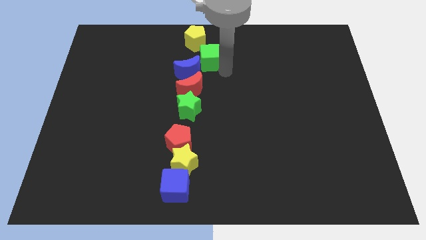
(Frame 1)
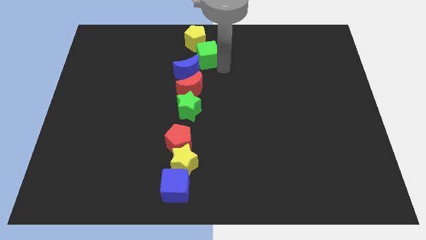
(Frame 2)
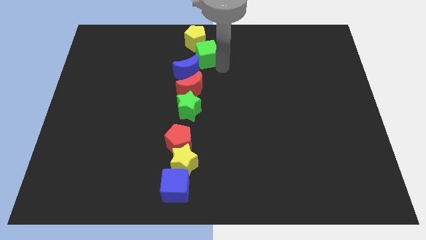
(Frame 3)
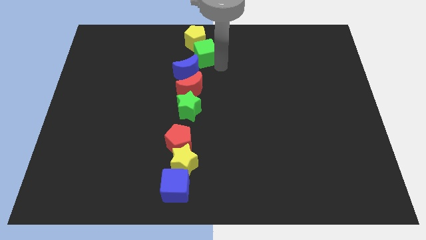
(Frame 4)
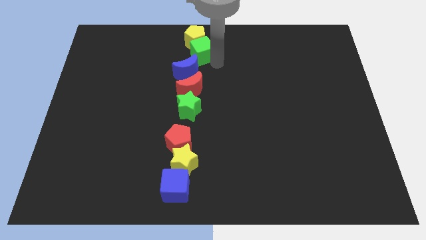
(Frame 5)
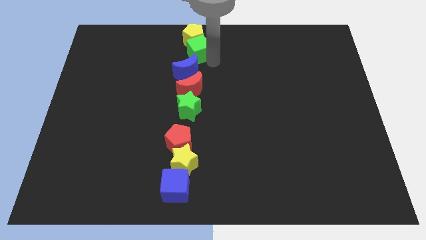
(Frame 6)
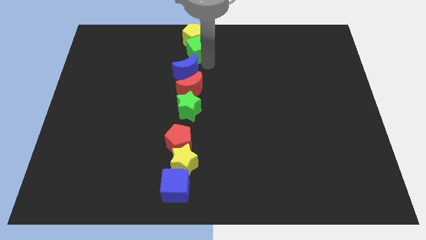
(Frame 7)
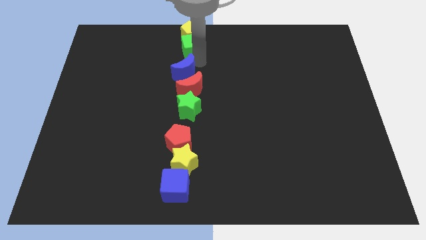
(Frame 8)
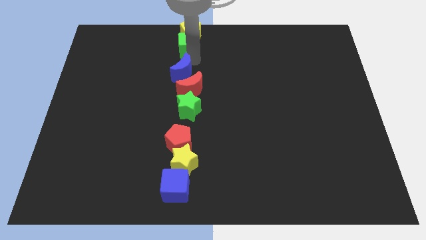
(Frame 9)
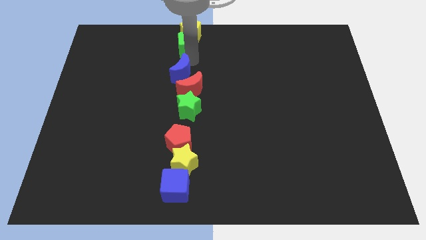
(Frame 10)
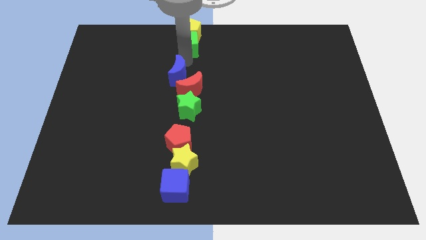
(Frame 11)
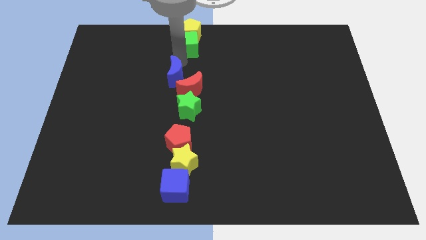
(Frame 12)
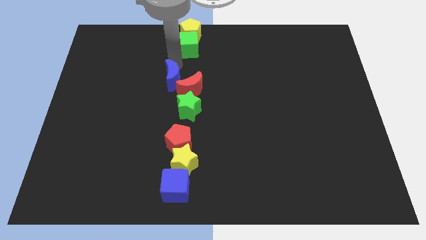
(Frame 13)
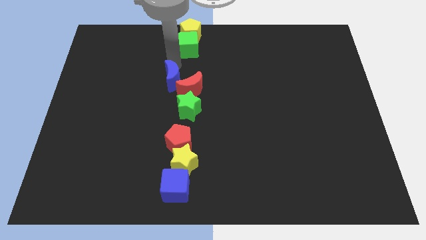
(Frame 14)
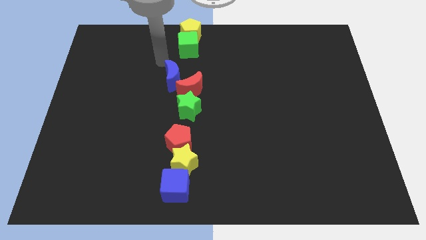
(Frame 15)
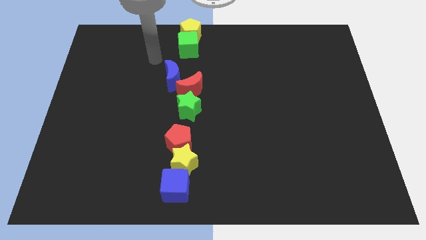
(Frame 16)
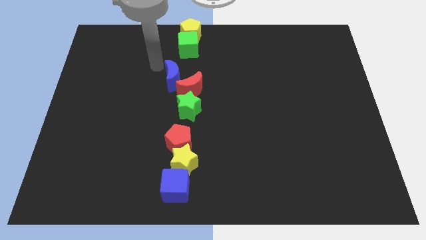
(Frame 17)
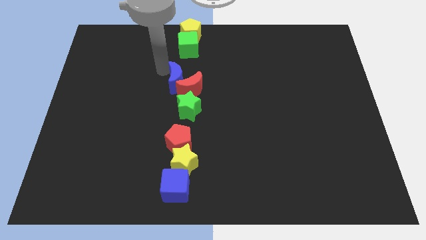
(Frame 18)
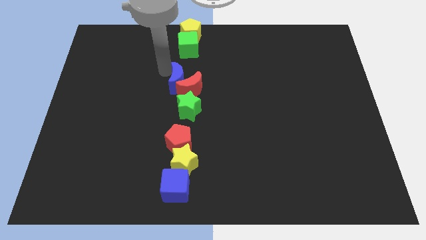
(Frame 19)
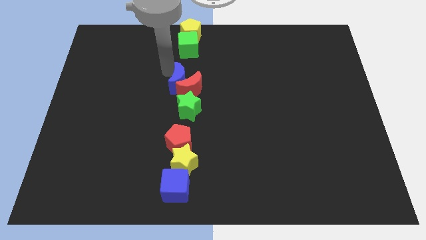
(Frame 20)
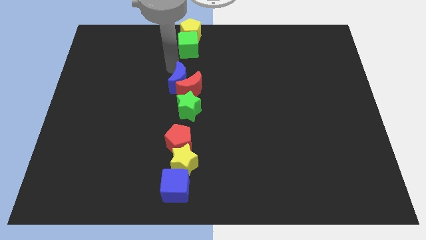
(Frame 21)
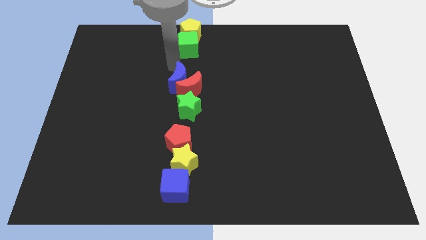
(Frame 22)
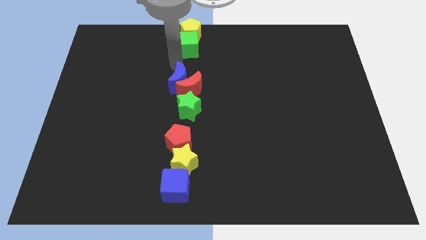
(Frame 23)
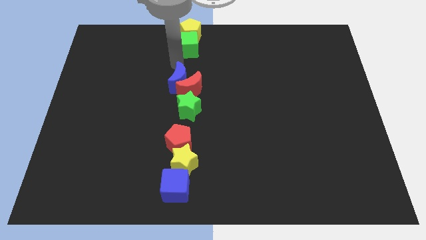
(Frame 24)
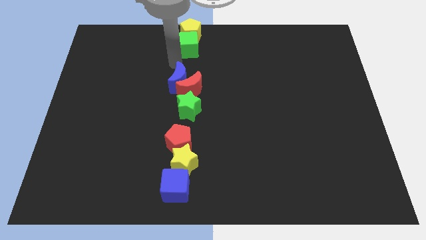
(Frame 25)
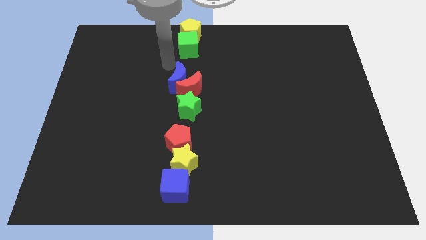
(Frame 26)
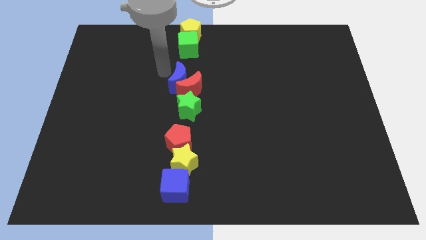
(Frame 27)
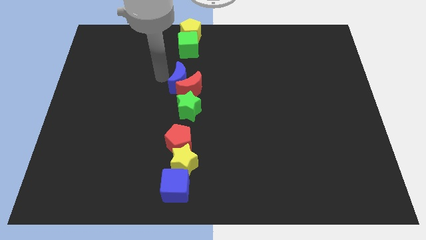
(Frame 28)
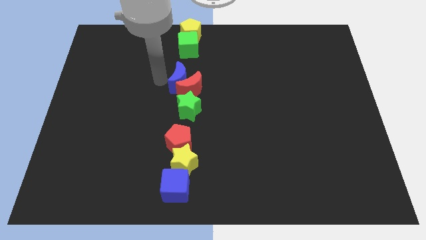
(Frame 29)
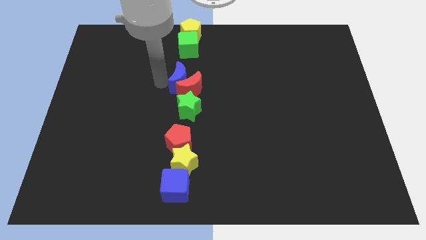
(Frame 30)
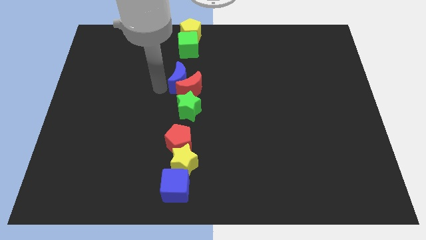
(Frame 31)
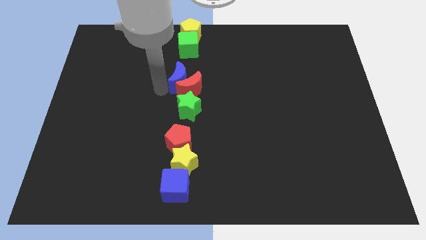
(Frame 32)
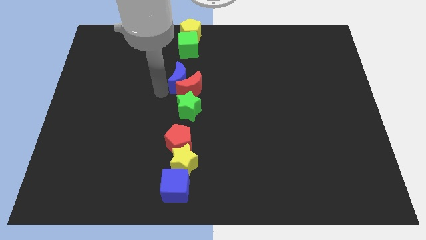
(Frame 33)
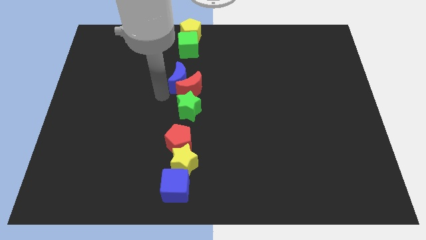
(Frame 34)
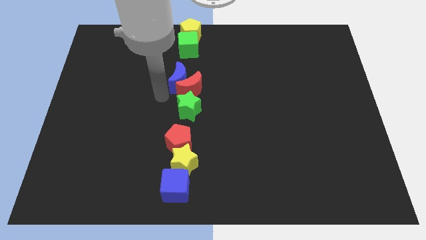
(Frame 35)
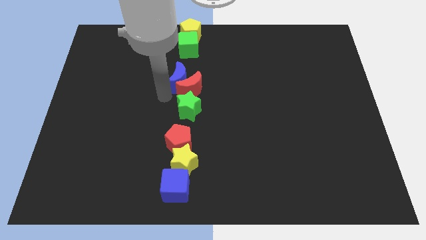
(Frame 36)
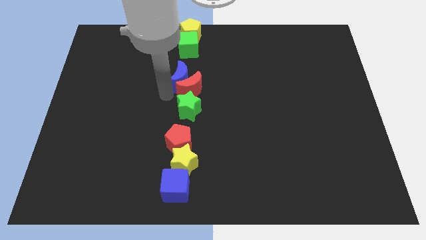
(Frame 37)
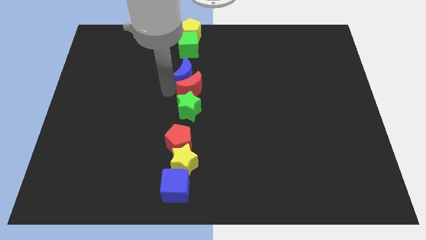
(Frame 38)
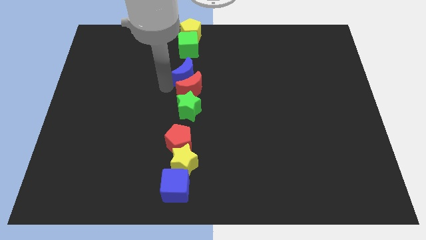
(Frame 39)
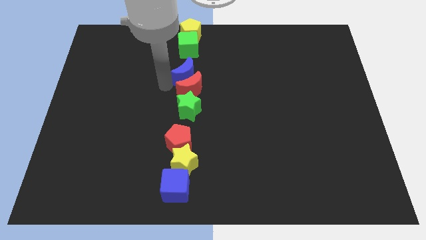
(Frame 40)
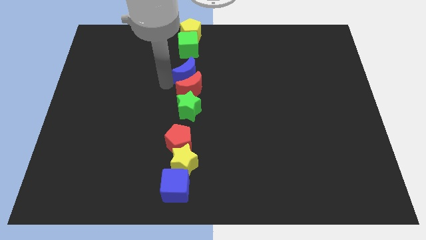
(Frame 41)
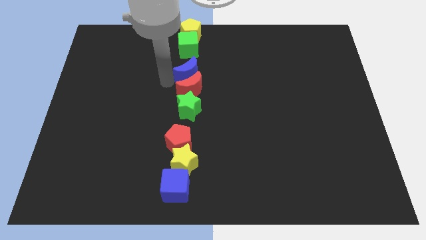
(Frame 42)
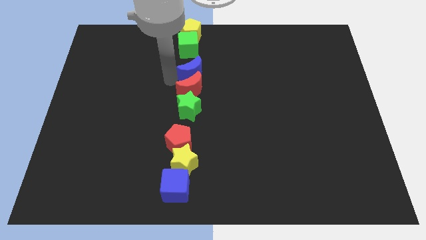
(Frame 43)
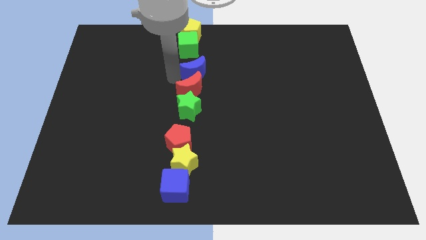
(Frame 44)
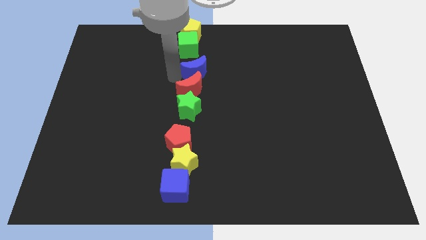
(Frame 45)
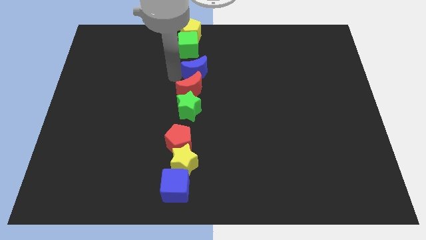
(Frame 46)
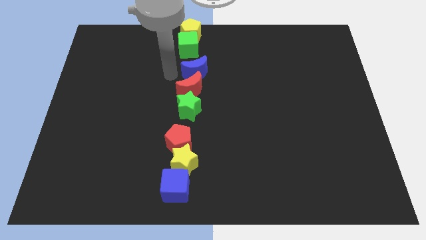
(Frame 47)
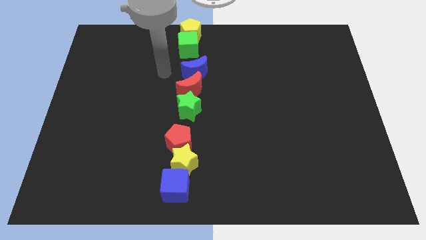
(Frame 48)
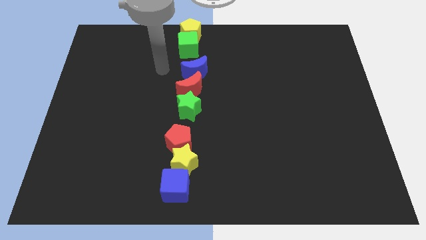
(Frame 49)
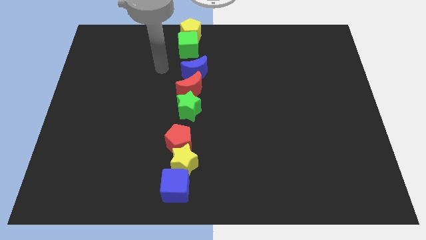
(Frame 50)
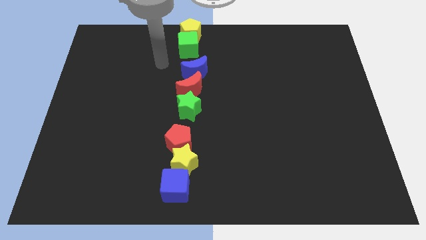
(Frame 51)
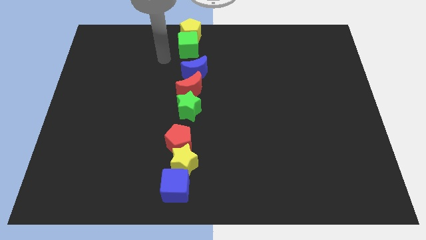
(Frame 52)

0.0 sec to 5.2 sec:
slightly push blue crescent below to the green cube

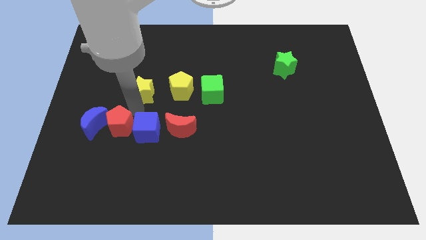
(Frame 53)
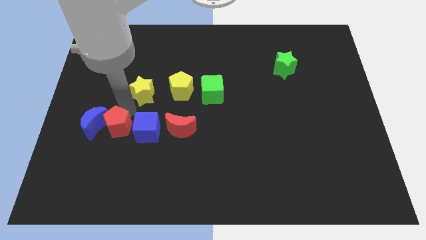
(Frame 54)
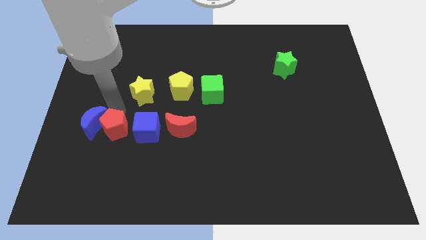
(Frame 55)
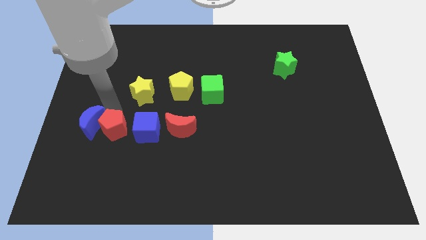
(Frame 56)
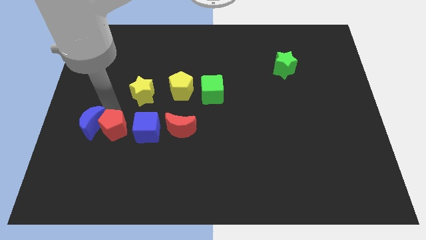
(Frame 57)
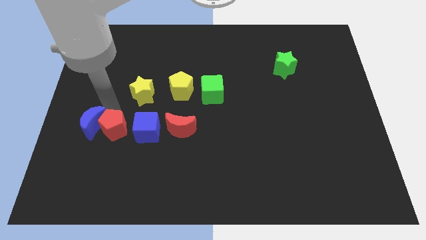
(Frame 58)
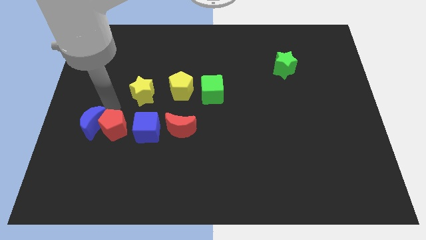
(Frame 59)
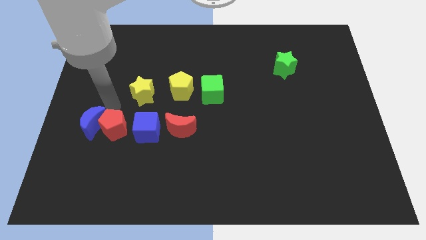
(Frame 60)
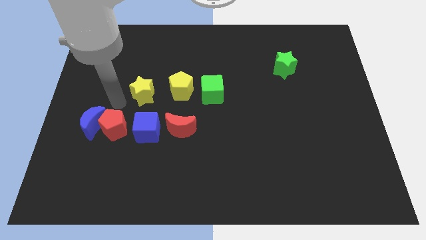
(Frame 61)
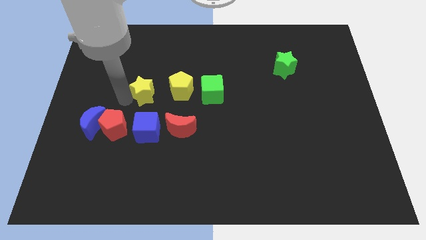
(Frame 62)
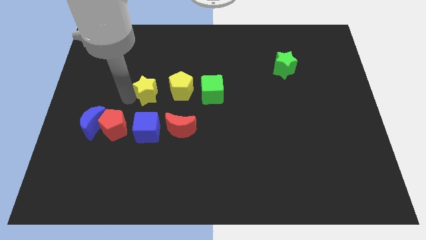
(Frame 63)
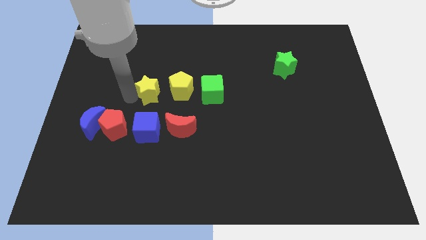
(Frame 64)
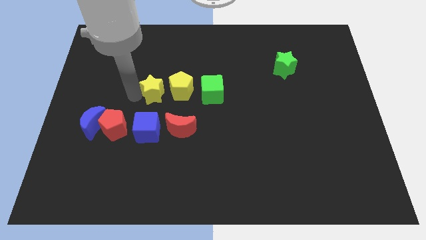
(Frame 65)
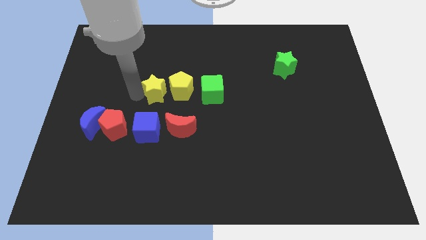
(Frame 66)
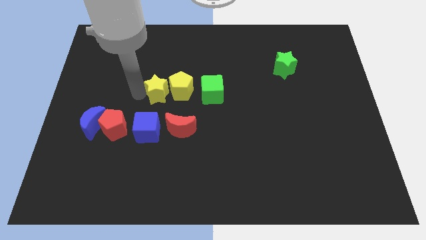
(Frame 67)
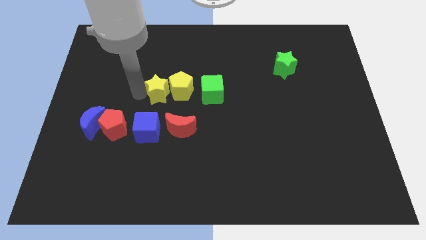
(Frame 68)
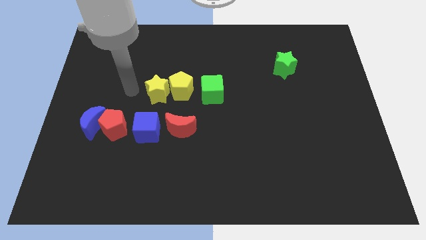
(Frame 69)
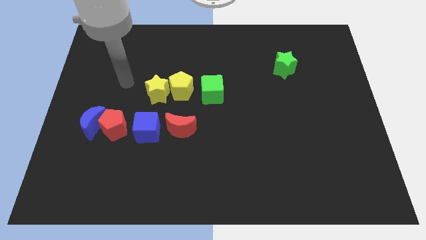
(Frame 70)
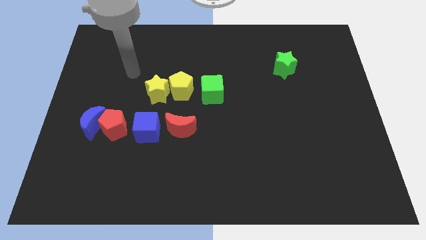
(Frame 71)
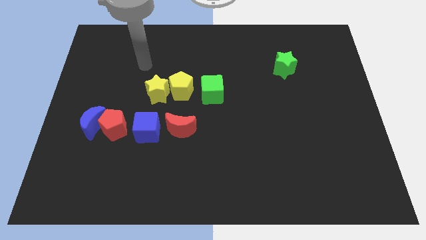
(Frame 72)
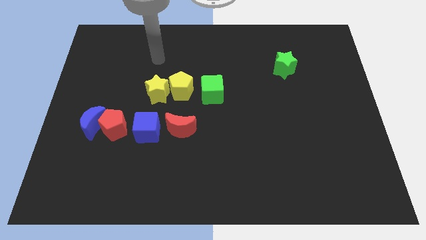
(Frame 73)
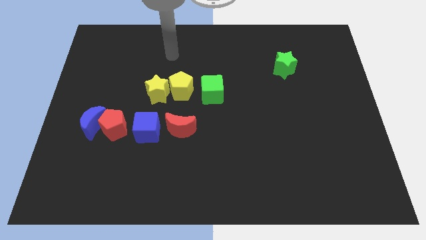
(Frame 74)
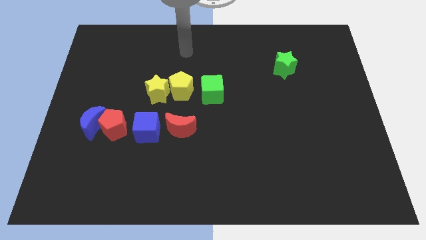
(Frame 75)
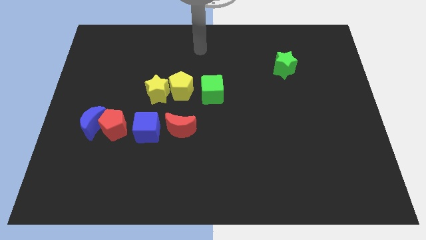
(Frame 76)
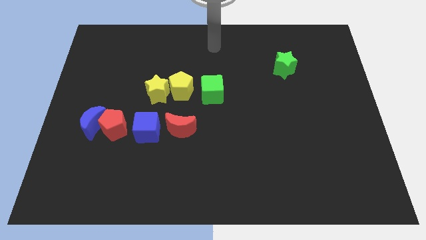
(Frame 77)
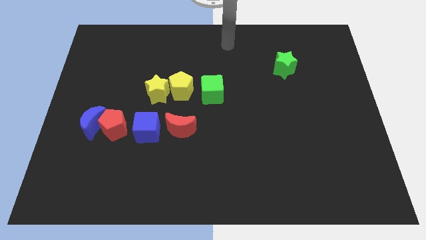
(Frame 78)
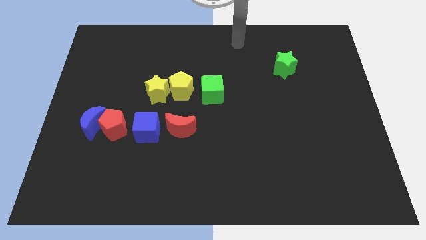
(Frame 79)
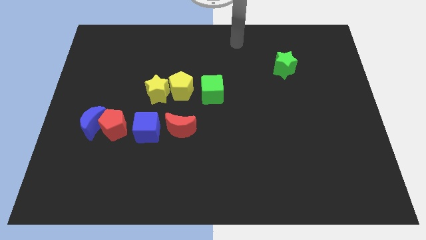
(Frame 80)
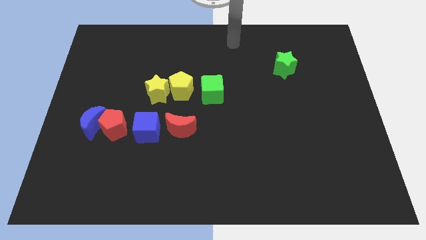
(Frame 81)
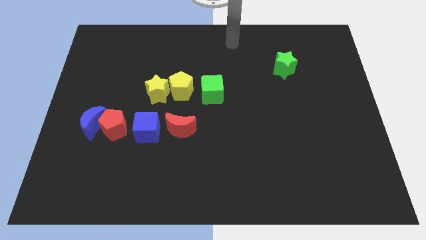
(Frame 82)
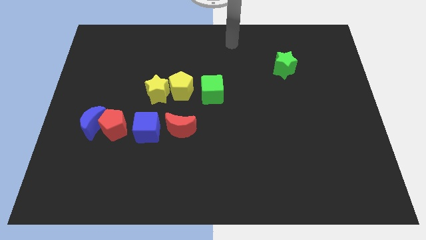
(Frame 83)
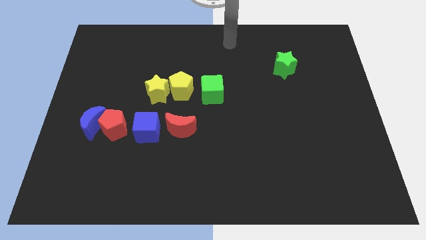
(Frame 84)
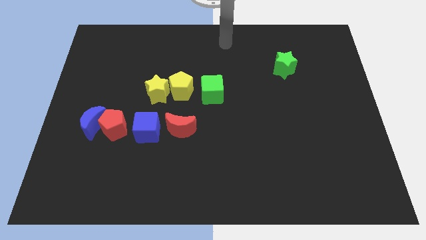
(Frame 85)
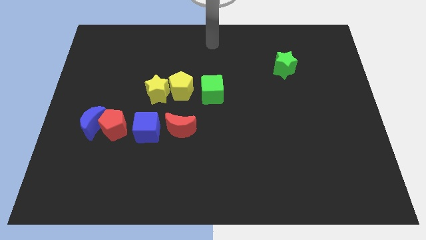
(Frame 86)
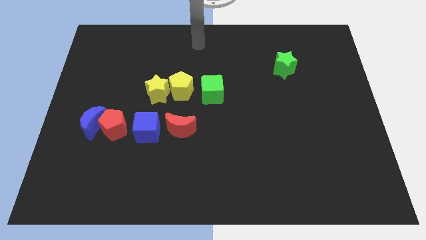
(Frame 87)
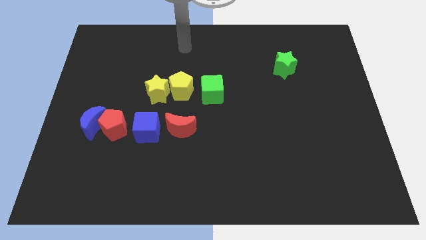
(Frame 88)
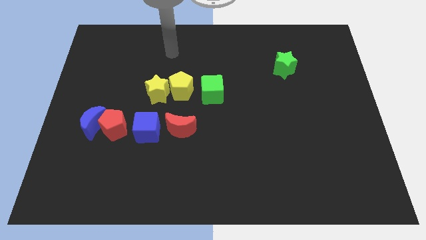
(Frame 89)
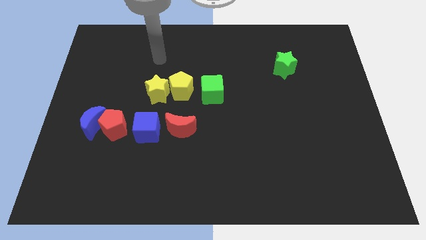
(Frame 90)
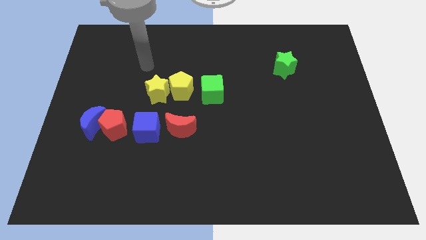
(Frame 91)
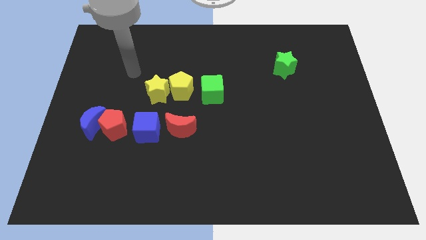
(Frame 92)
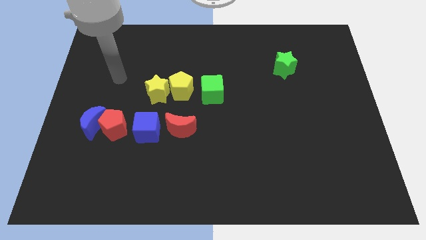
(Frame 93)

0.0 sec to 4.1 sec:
move the yellow star close to the yellow pentagon
